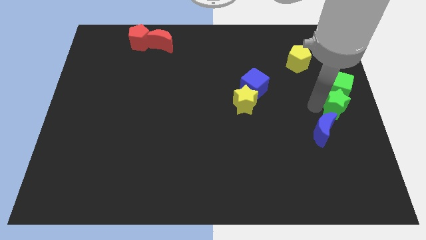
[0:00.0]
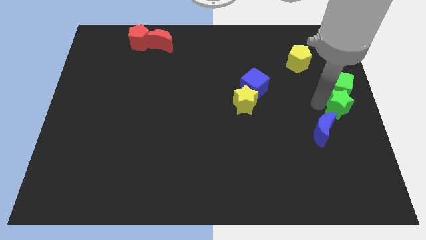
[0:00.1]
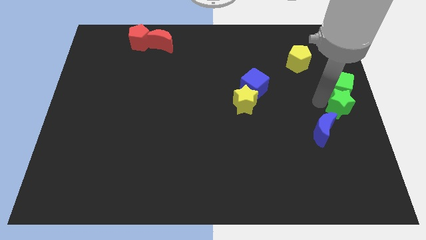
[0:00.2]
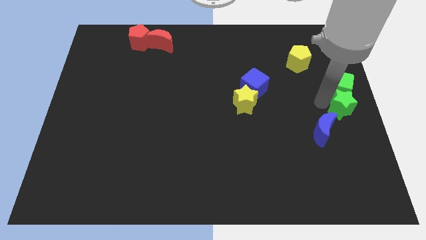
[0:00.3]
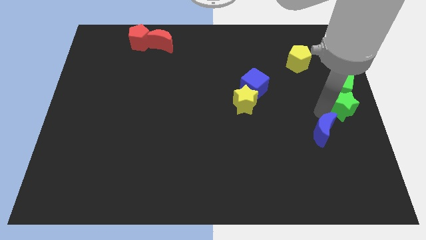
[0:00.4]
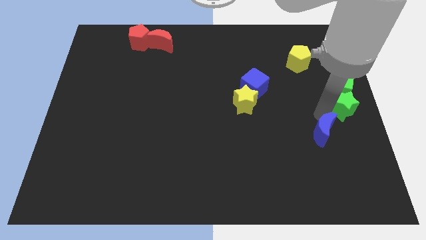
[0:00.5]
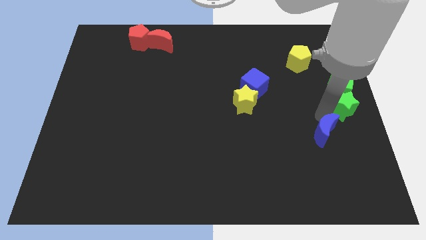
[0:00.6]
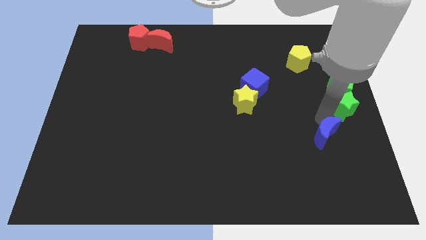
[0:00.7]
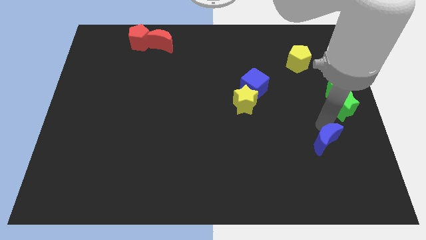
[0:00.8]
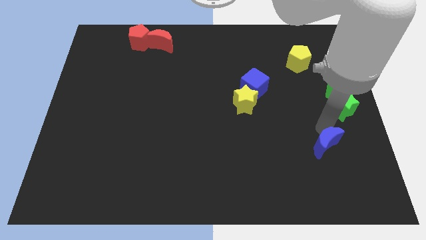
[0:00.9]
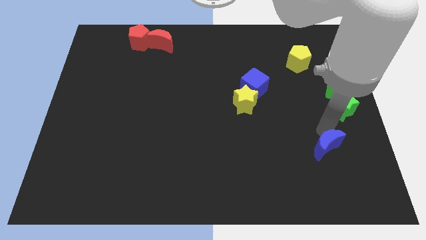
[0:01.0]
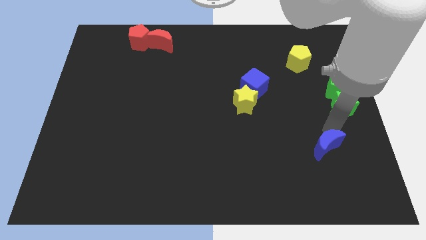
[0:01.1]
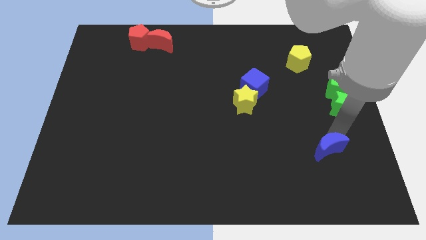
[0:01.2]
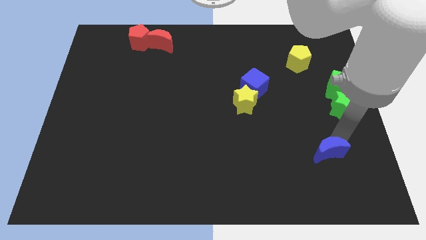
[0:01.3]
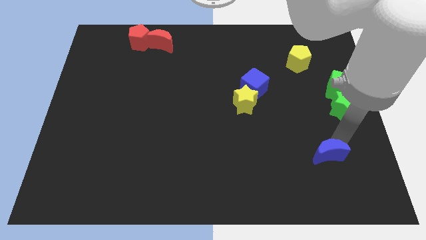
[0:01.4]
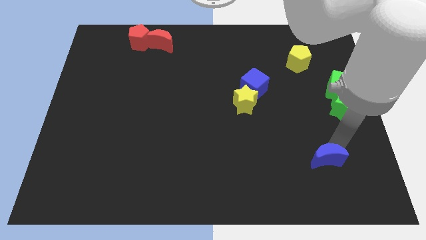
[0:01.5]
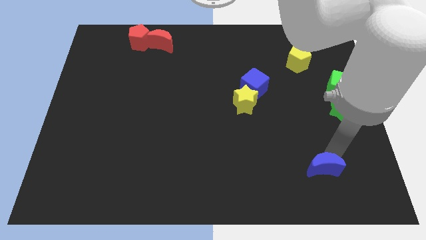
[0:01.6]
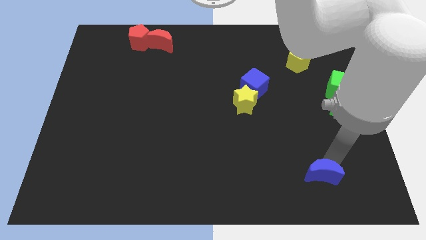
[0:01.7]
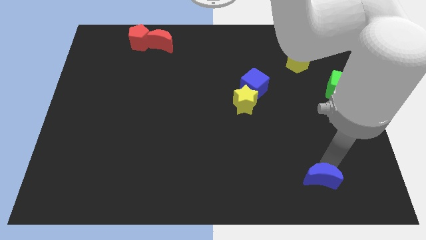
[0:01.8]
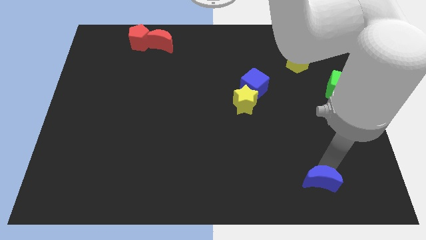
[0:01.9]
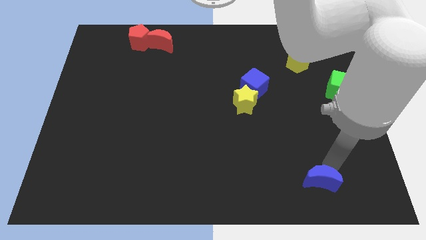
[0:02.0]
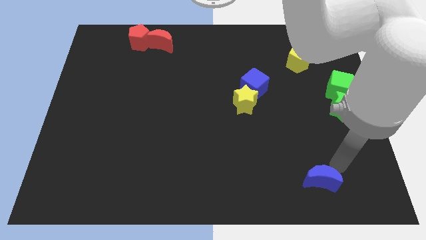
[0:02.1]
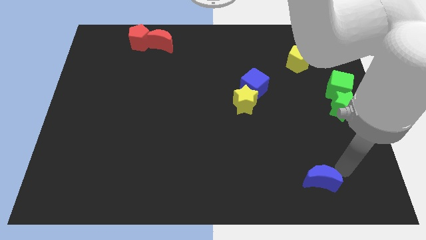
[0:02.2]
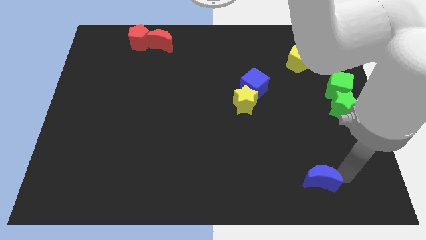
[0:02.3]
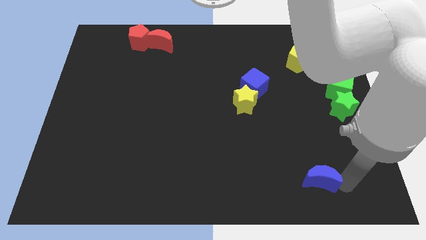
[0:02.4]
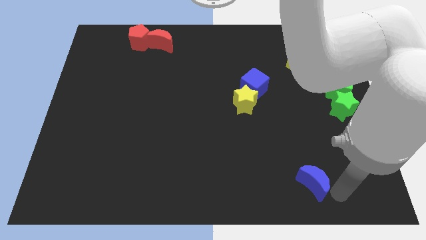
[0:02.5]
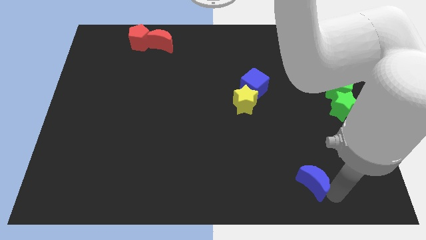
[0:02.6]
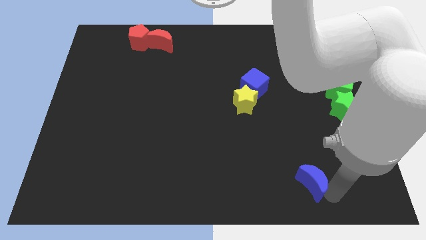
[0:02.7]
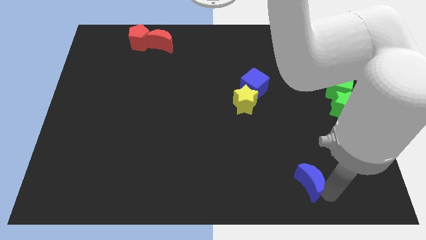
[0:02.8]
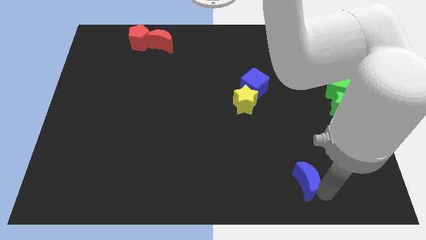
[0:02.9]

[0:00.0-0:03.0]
push the blue moon to the bottom of the board

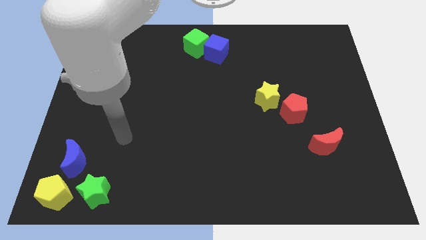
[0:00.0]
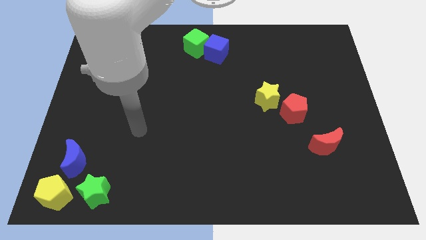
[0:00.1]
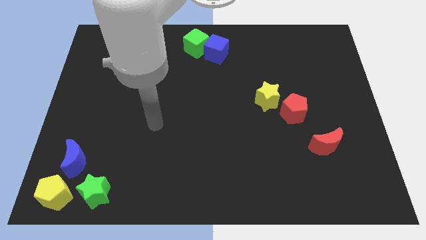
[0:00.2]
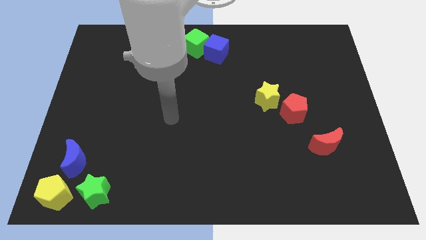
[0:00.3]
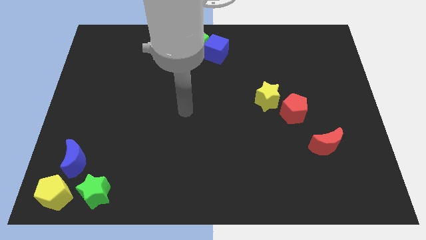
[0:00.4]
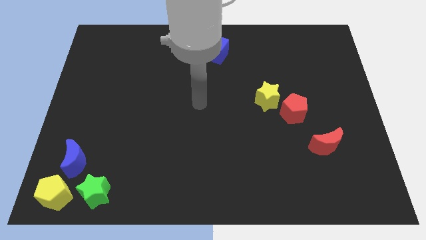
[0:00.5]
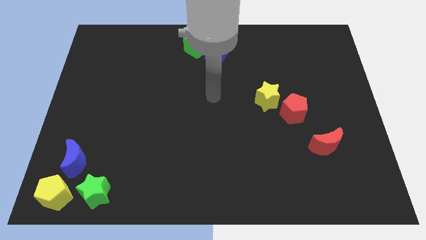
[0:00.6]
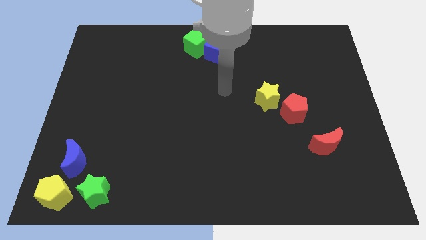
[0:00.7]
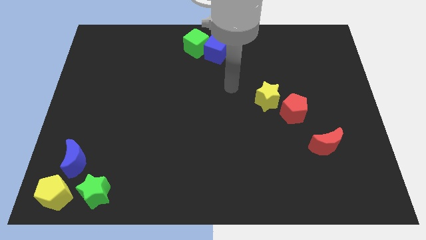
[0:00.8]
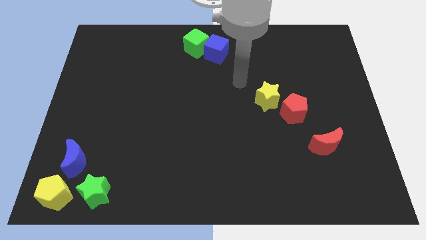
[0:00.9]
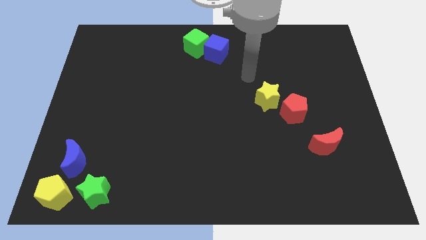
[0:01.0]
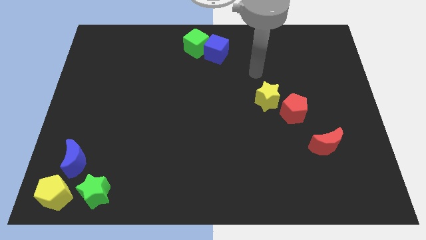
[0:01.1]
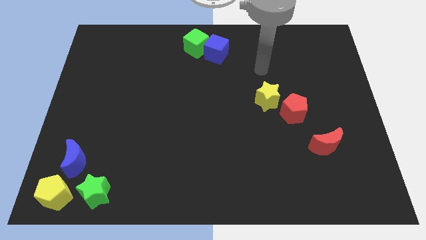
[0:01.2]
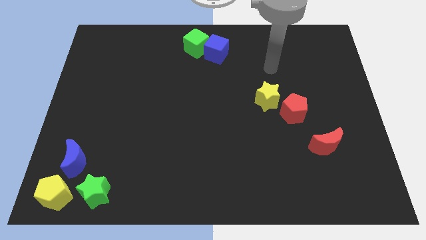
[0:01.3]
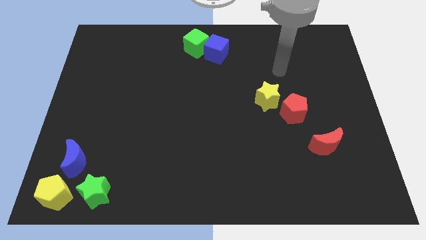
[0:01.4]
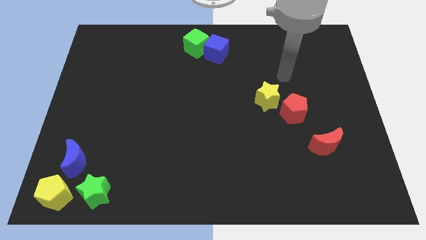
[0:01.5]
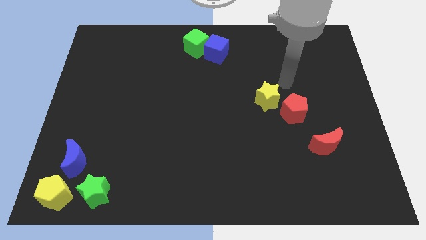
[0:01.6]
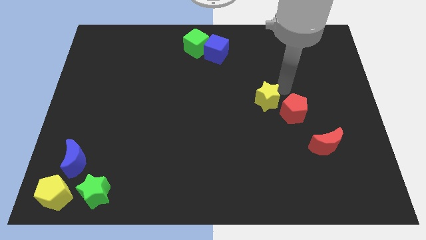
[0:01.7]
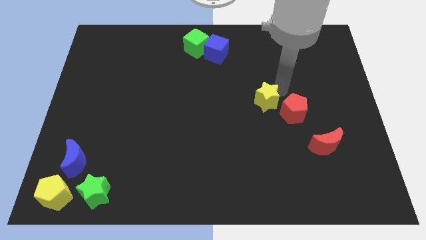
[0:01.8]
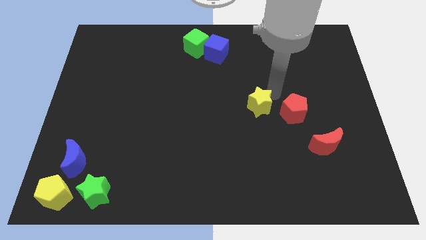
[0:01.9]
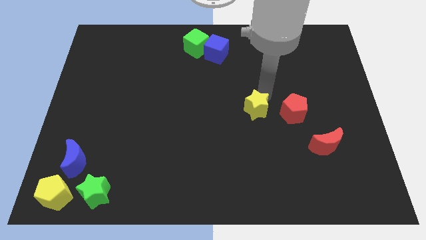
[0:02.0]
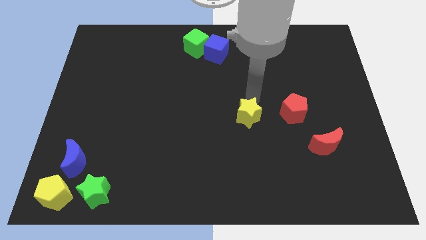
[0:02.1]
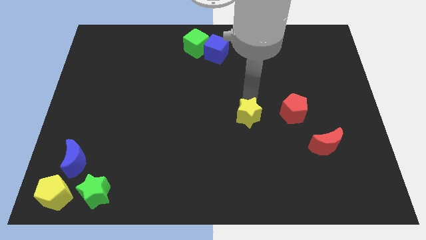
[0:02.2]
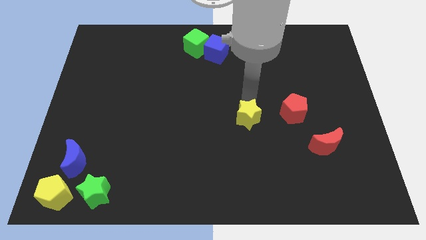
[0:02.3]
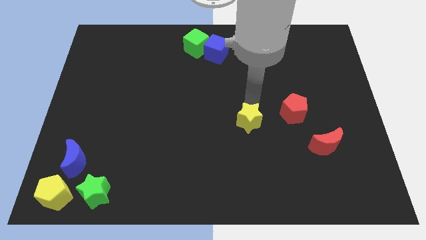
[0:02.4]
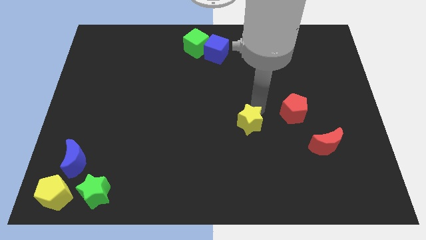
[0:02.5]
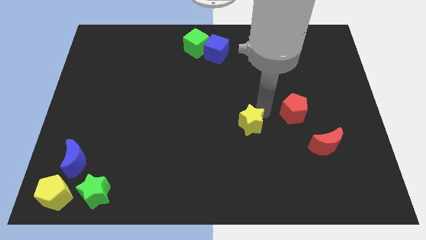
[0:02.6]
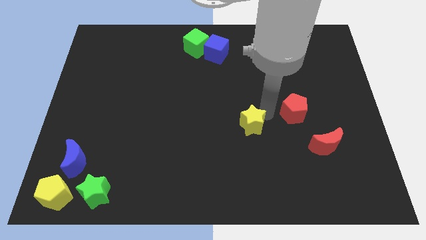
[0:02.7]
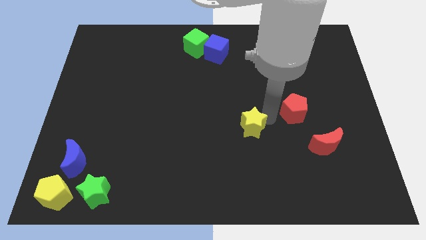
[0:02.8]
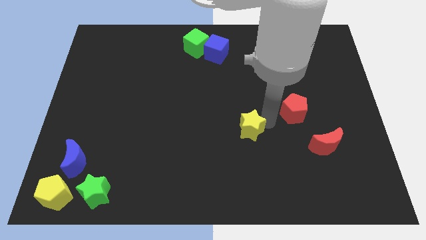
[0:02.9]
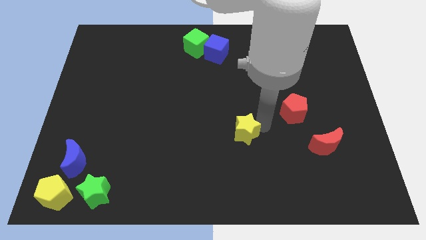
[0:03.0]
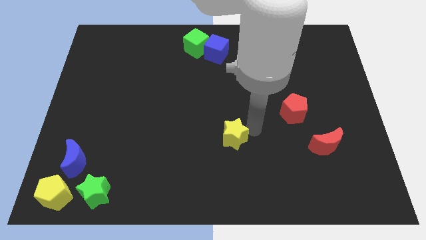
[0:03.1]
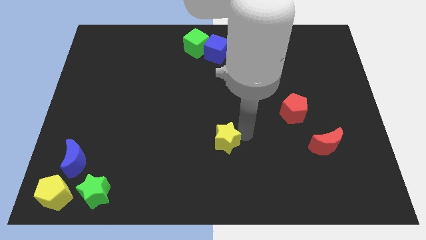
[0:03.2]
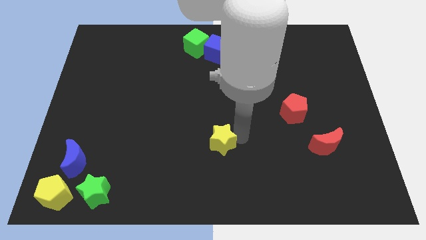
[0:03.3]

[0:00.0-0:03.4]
move the yellow star away from the red pentagon

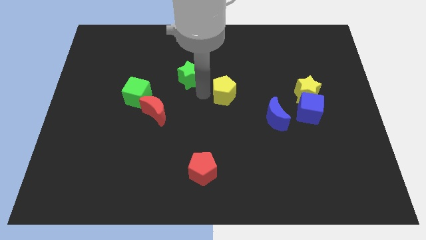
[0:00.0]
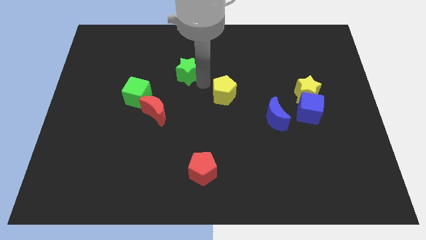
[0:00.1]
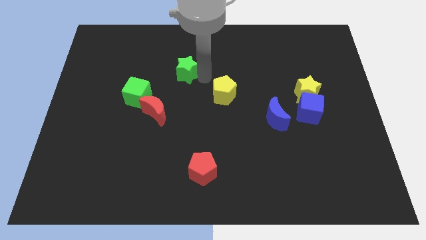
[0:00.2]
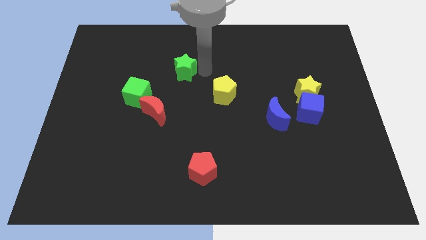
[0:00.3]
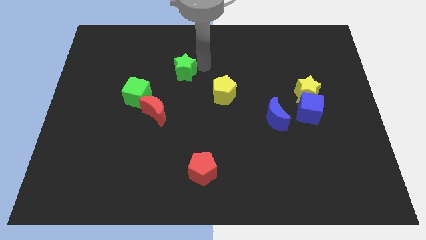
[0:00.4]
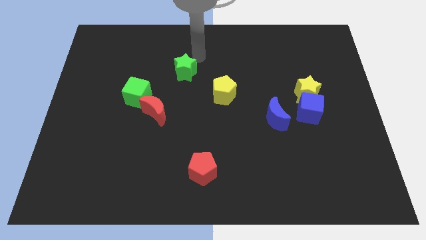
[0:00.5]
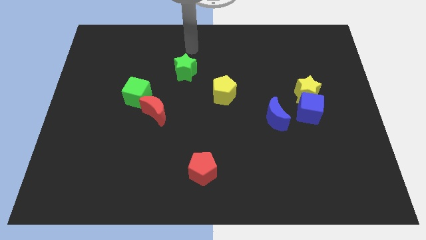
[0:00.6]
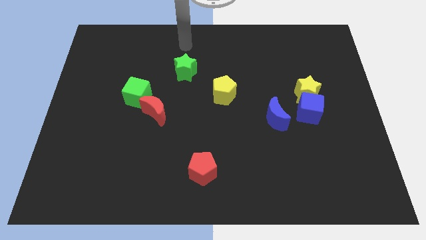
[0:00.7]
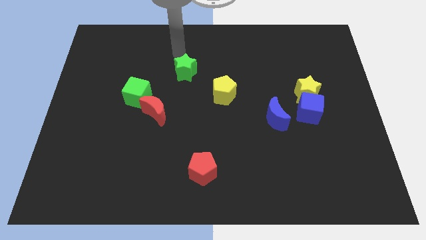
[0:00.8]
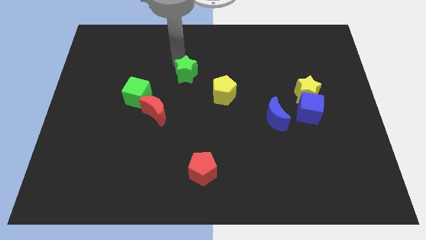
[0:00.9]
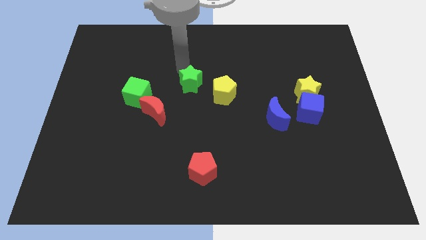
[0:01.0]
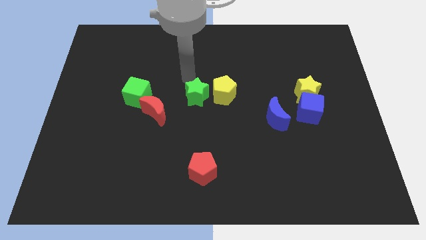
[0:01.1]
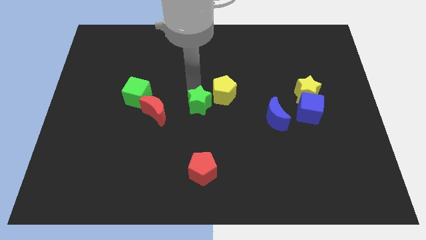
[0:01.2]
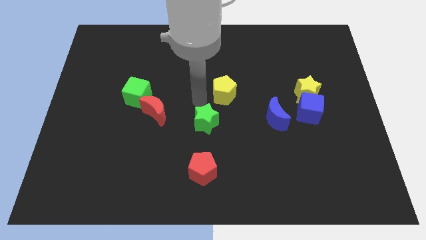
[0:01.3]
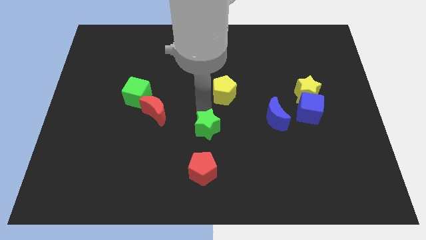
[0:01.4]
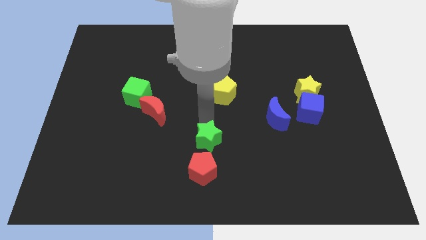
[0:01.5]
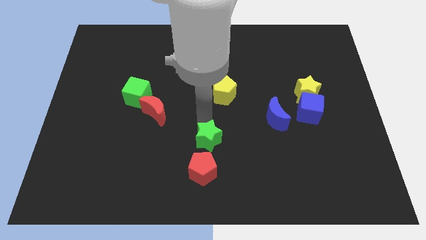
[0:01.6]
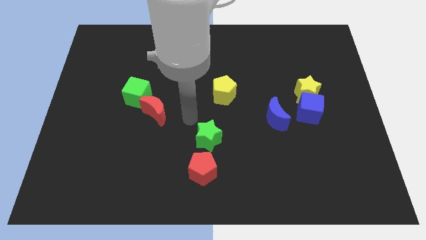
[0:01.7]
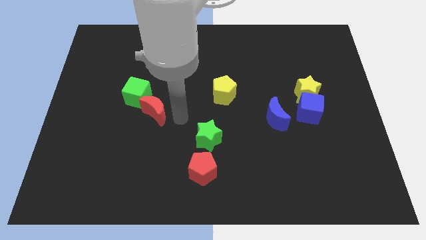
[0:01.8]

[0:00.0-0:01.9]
move the green star to the top side of the red pentagon

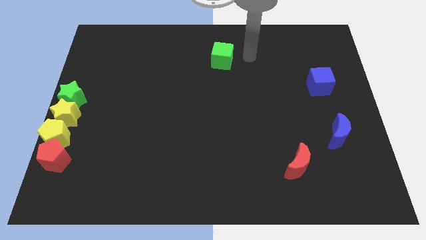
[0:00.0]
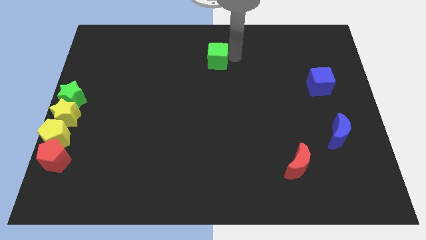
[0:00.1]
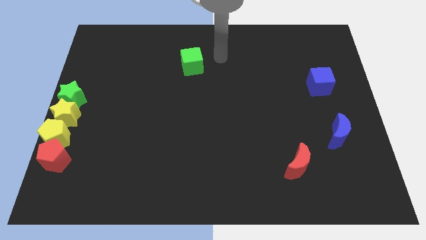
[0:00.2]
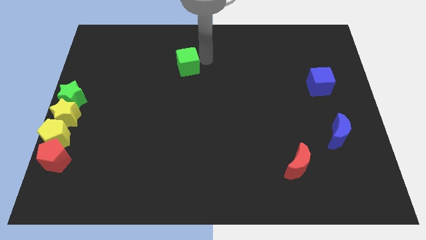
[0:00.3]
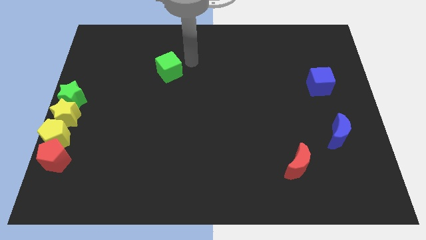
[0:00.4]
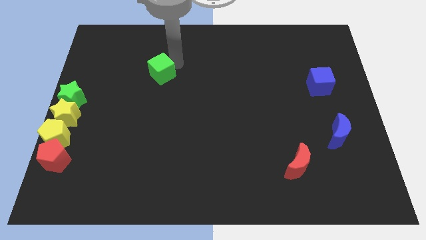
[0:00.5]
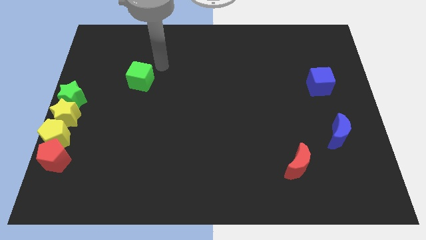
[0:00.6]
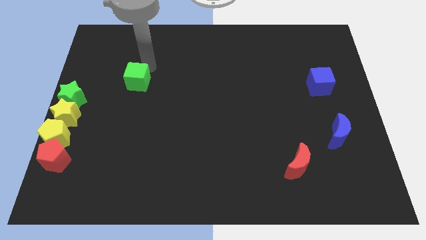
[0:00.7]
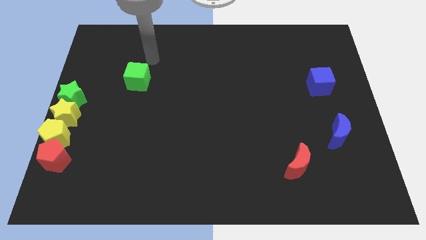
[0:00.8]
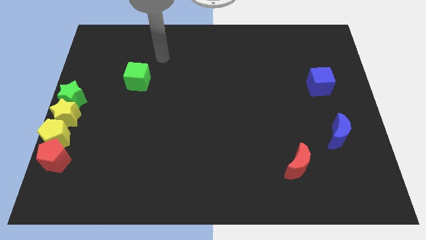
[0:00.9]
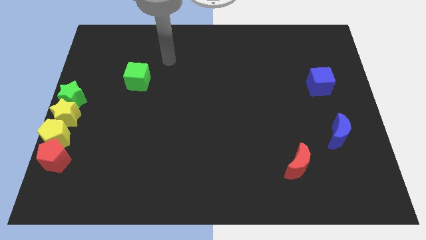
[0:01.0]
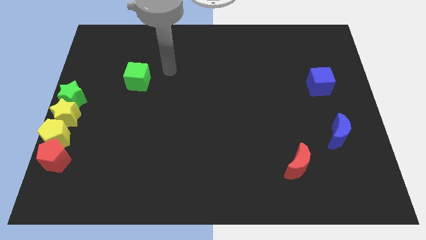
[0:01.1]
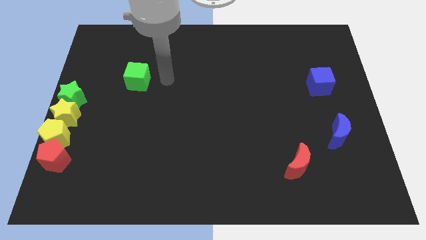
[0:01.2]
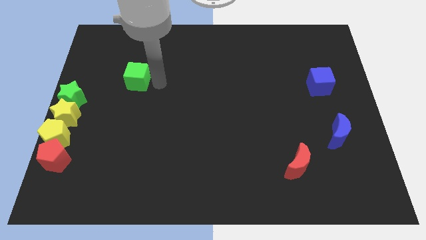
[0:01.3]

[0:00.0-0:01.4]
move green cube towards the green star
